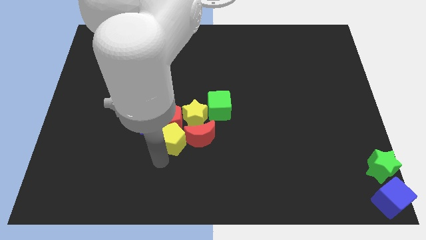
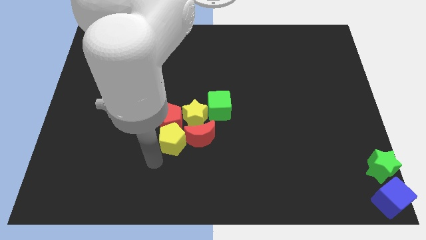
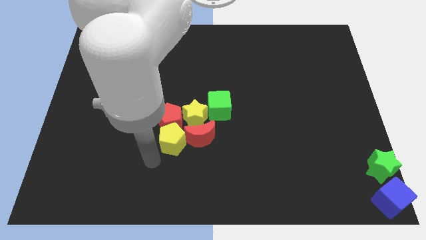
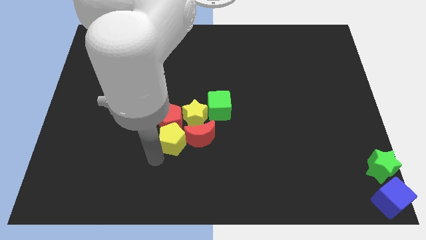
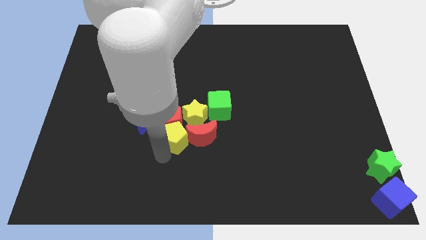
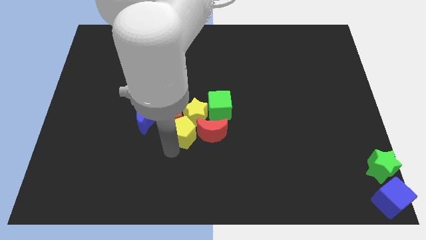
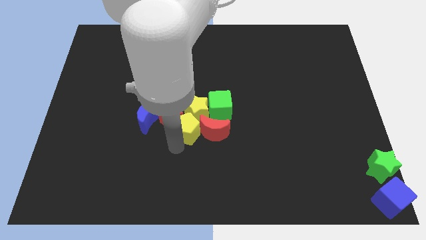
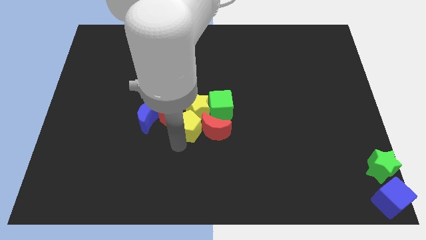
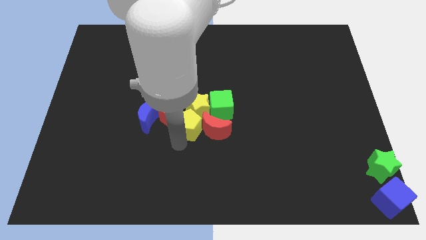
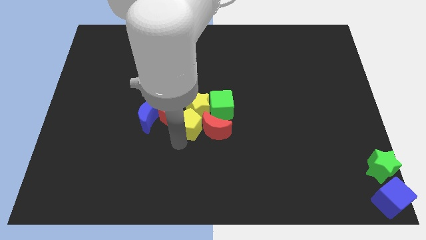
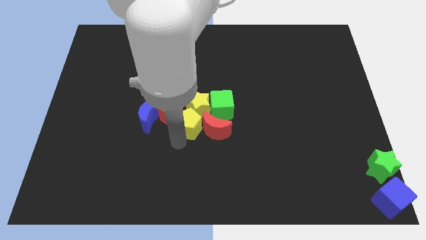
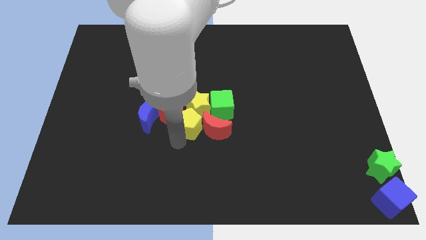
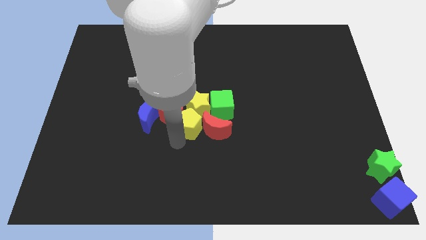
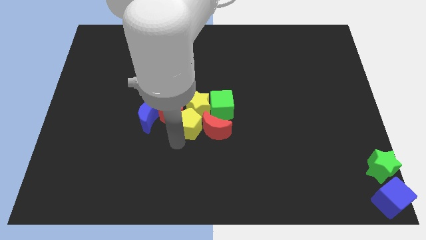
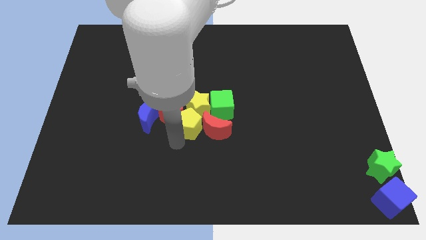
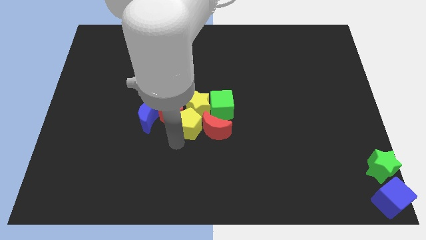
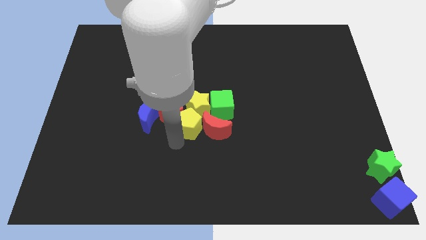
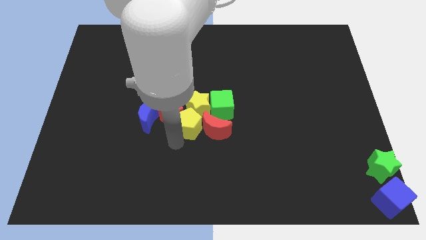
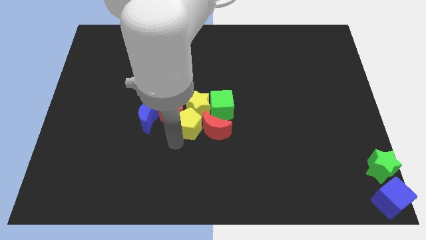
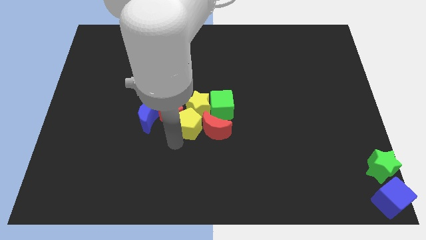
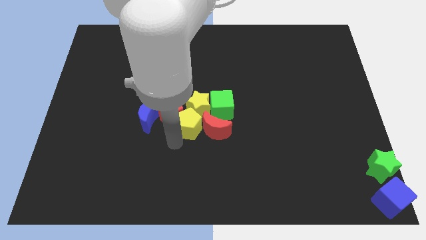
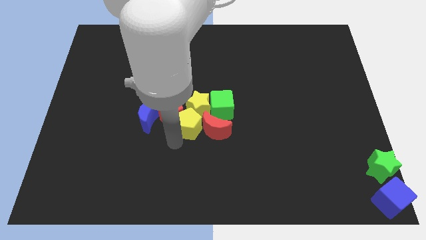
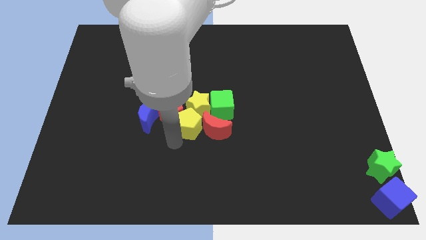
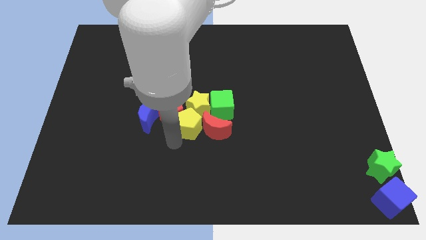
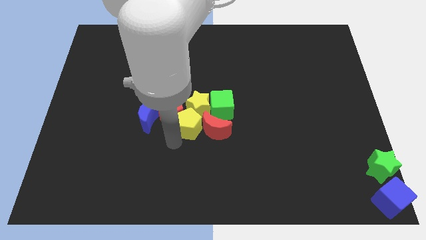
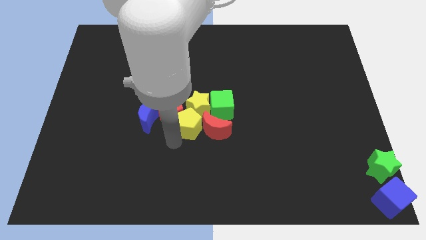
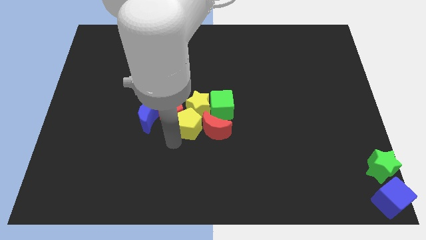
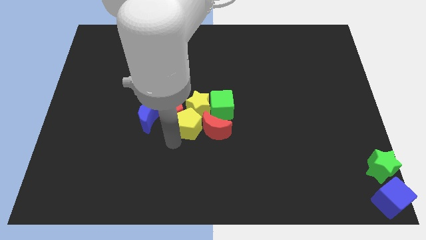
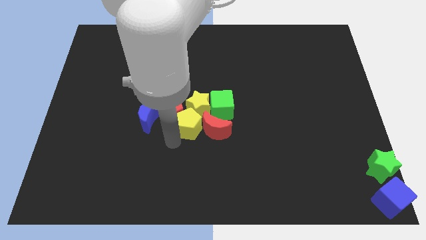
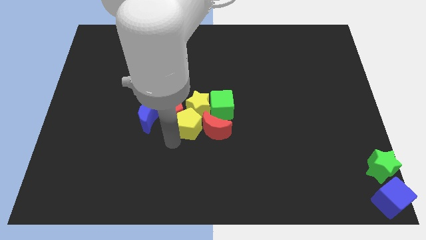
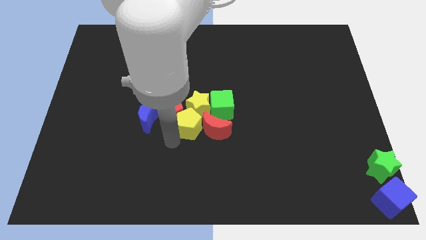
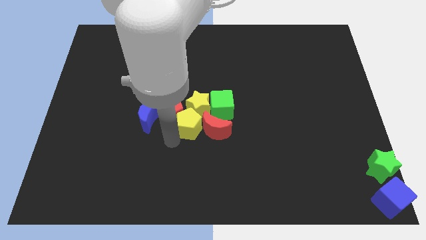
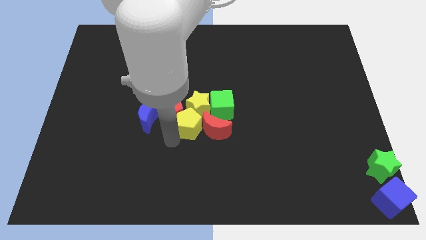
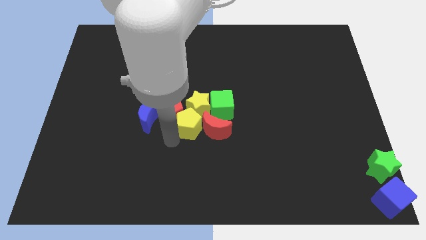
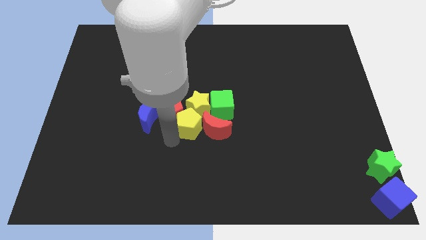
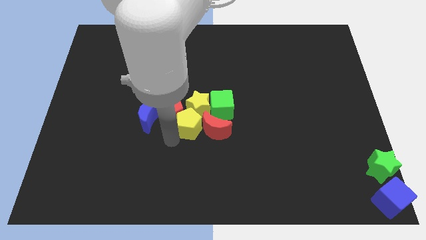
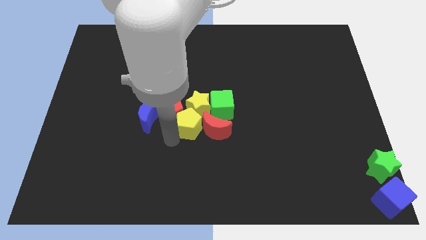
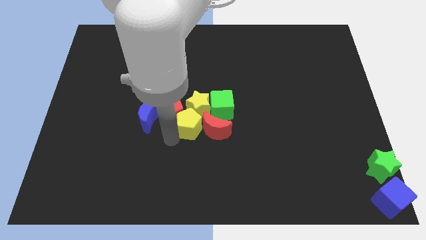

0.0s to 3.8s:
put the yellow pentagon in between the red pentagon and red crescent

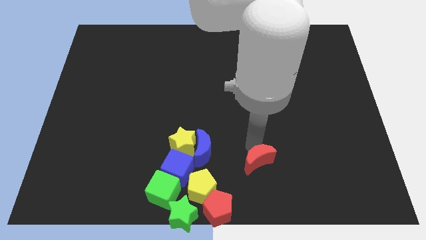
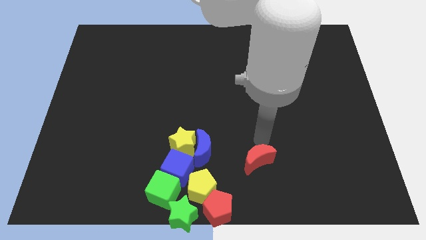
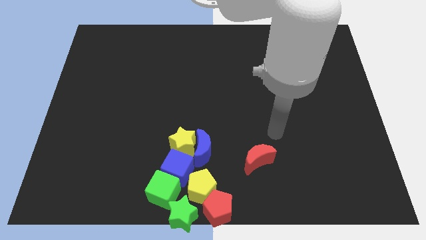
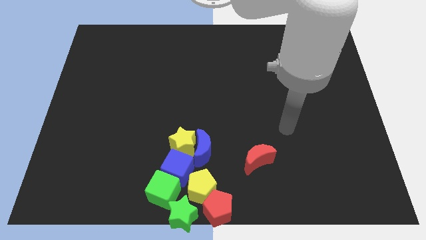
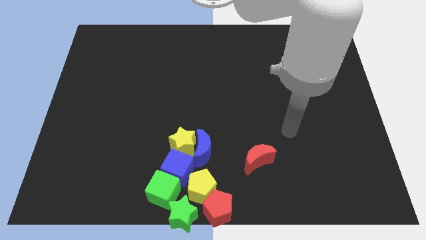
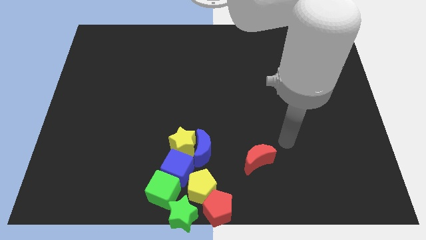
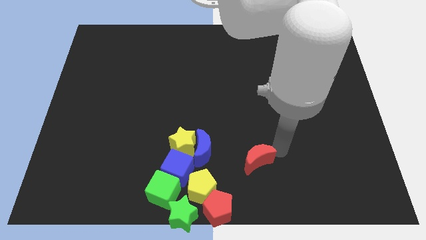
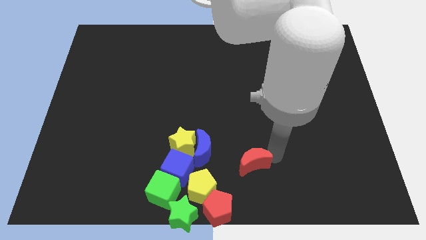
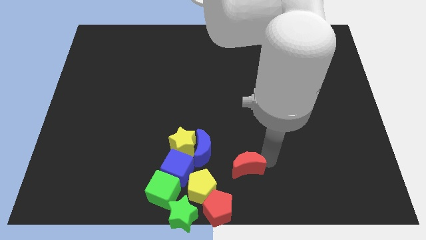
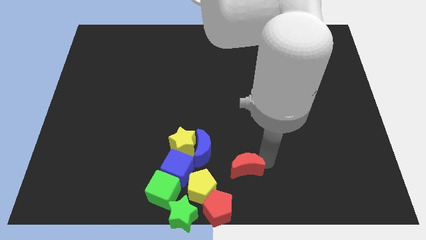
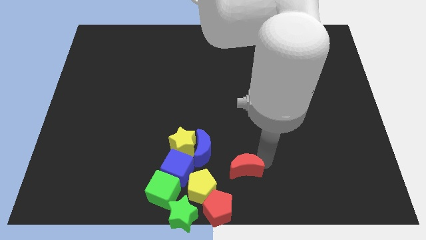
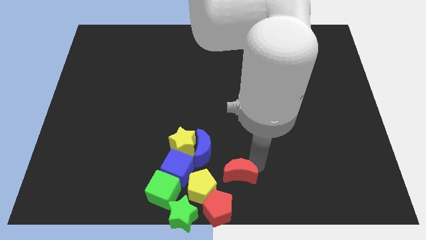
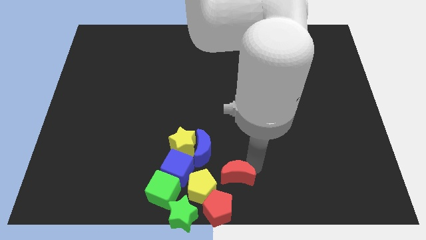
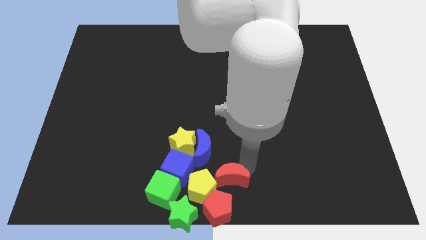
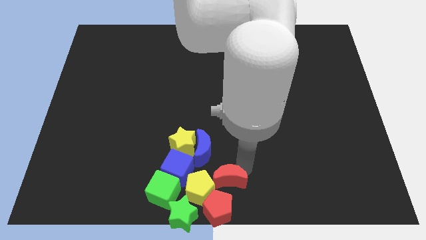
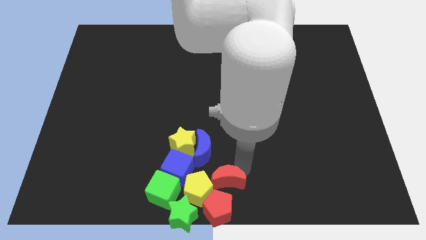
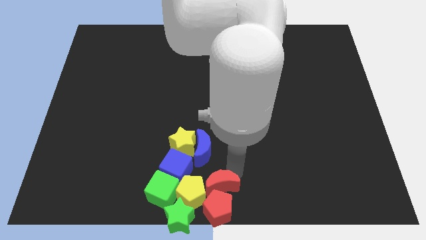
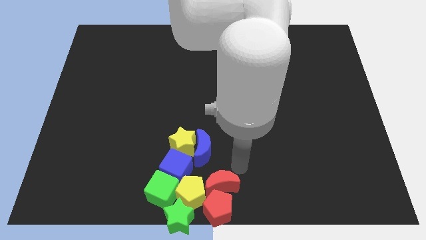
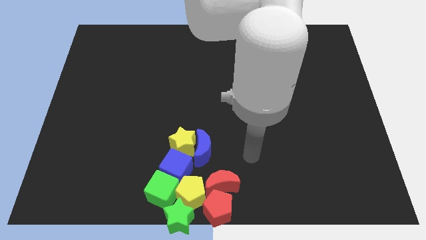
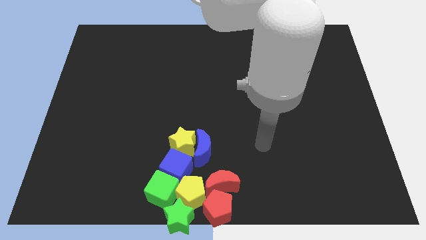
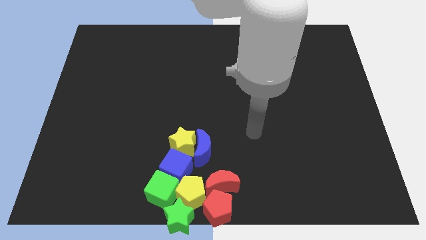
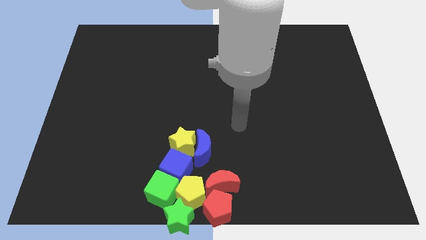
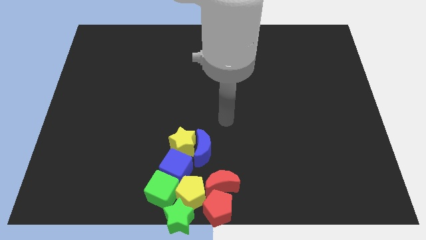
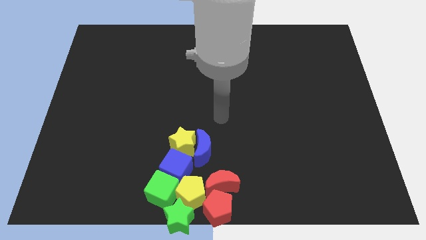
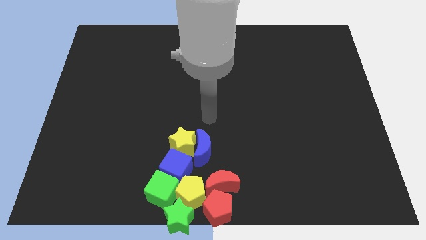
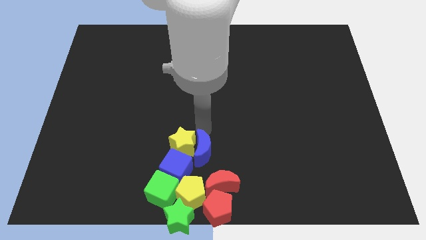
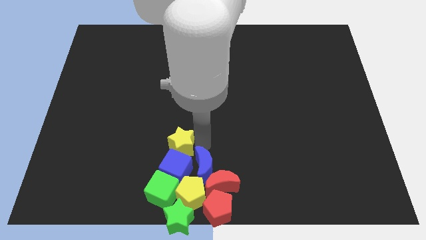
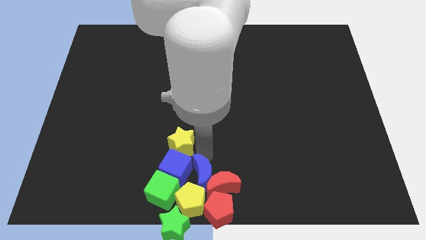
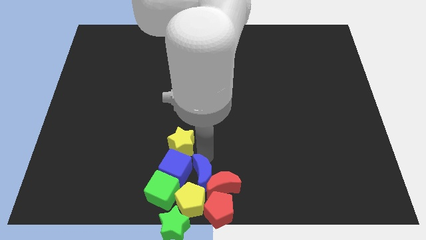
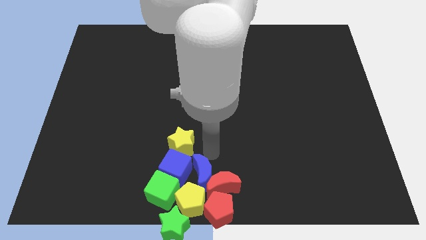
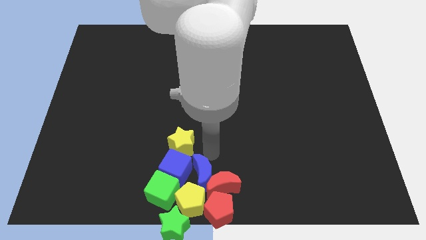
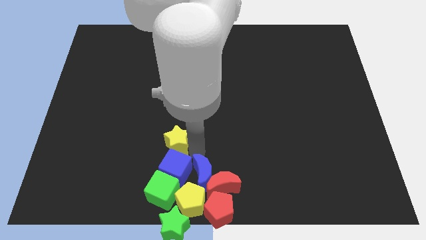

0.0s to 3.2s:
push the red crescent into the yellow pentagon

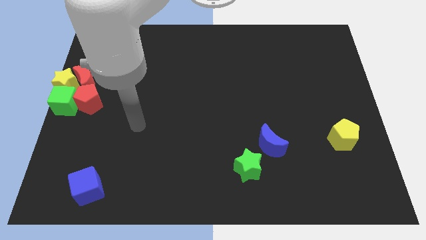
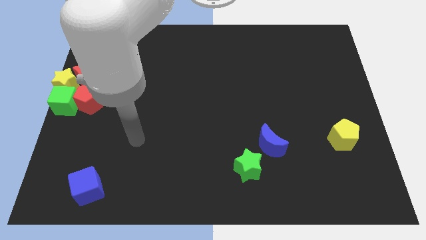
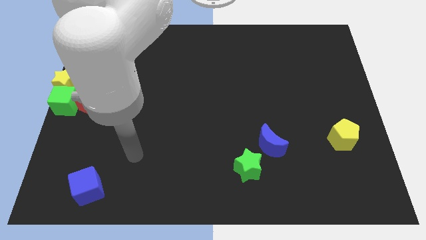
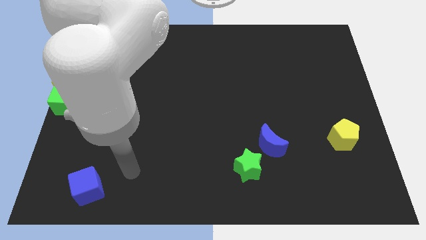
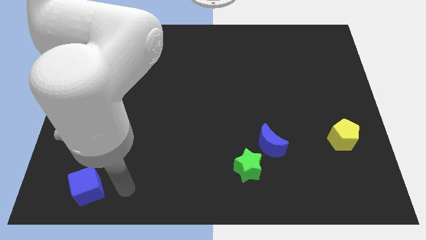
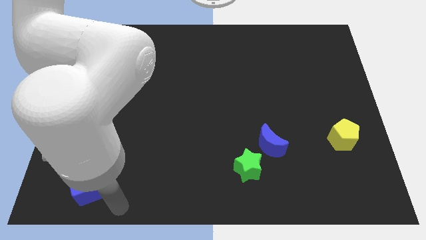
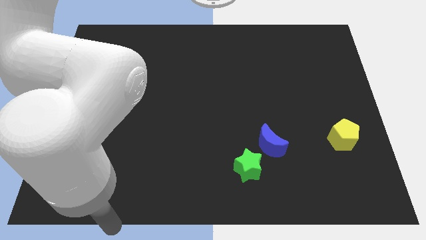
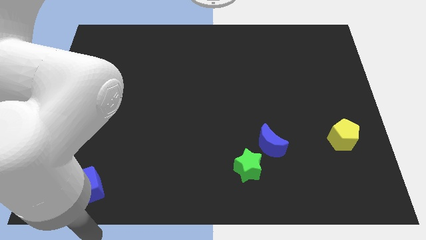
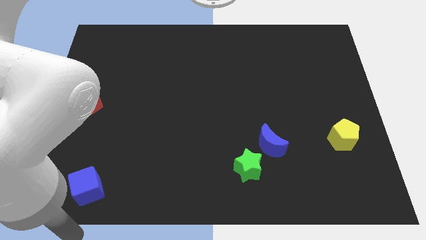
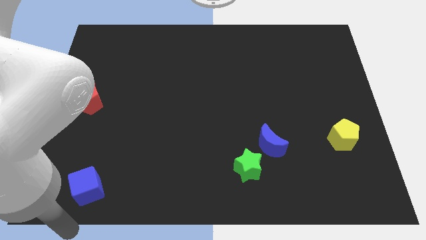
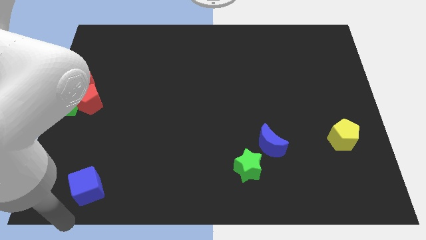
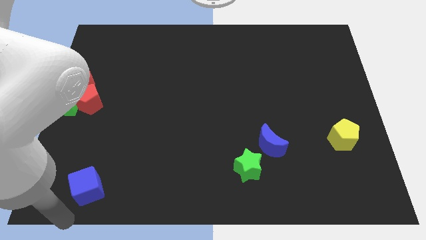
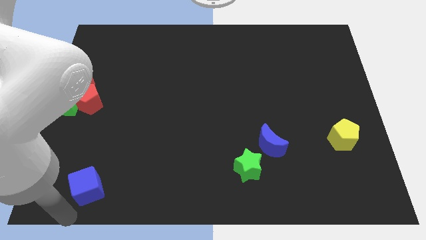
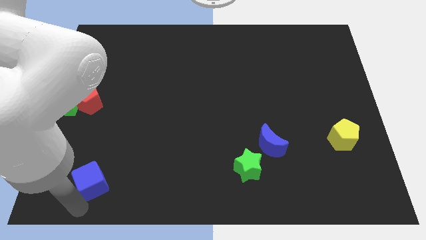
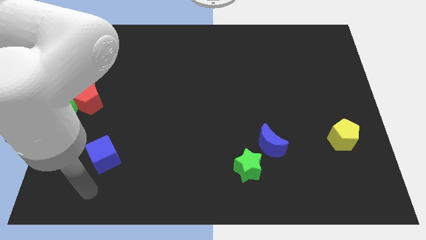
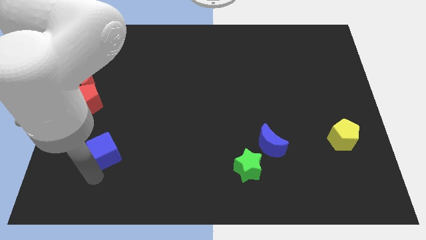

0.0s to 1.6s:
slightly move the blue cube up a bit

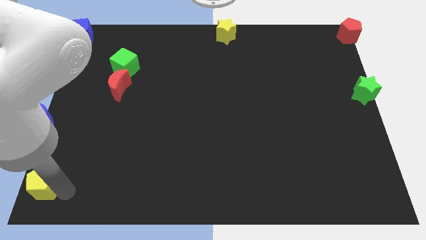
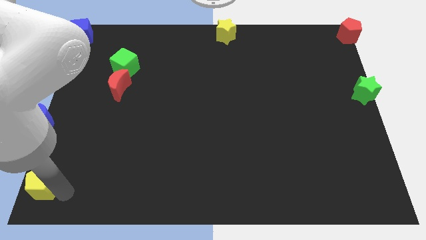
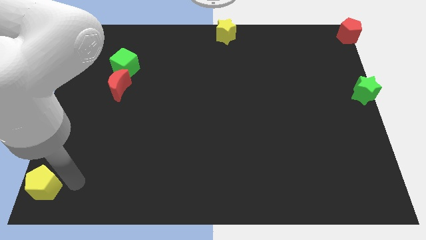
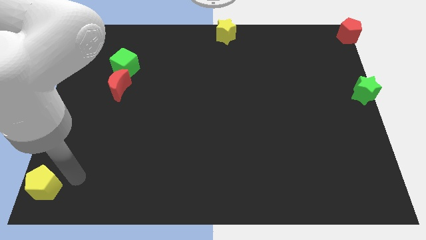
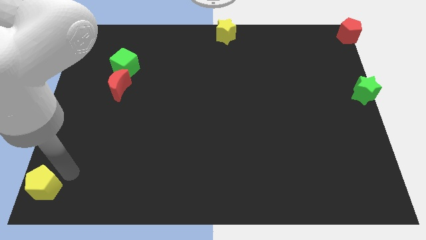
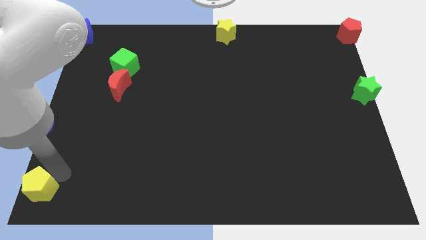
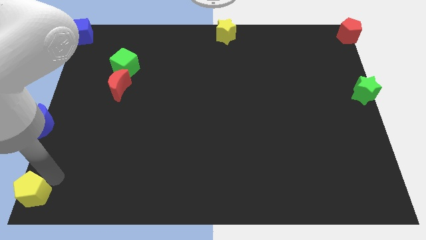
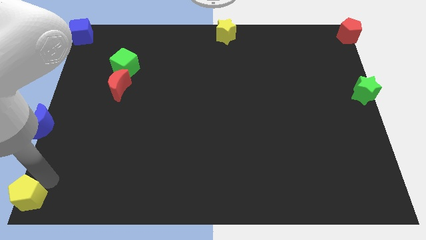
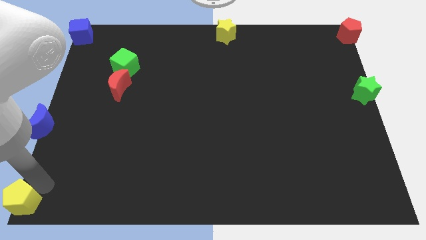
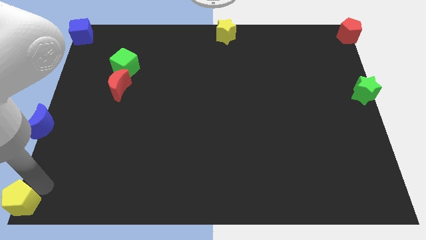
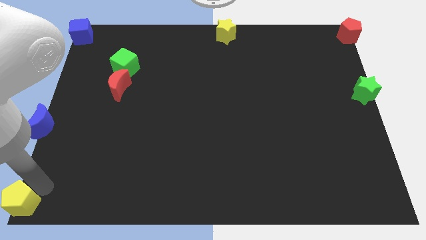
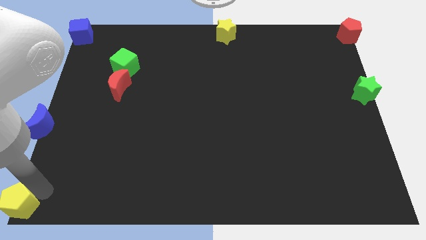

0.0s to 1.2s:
push yellow pentagon towards bottom left corner
